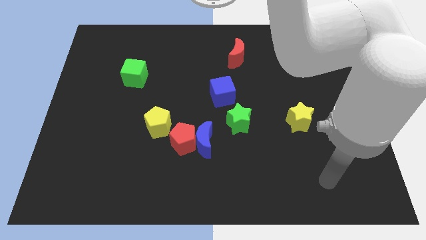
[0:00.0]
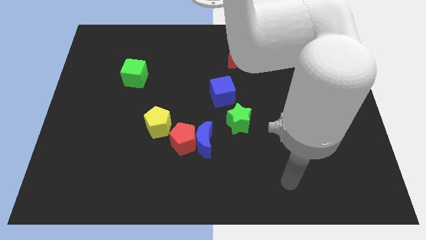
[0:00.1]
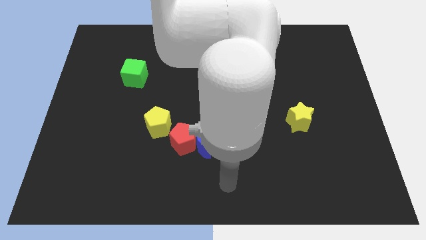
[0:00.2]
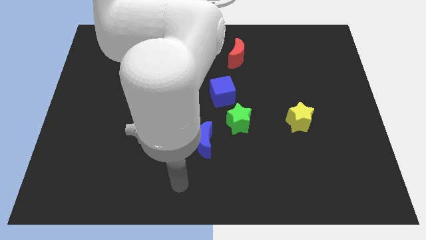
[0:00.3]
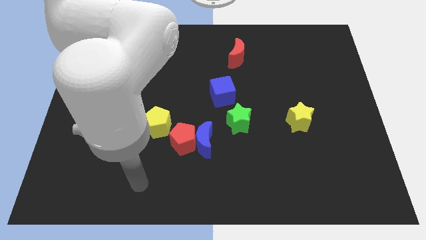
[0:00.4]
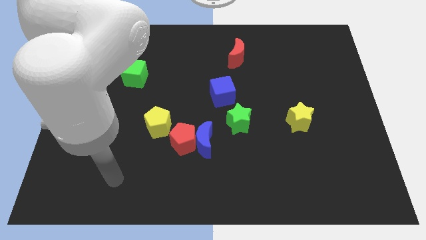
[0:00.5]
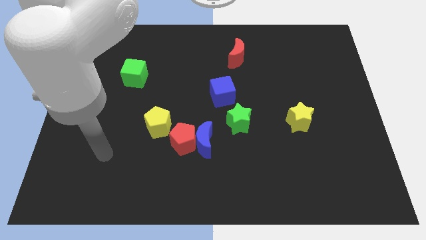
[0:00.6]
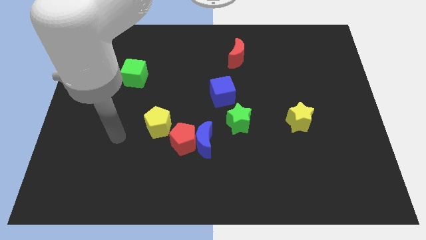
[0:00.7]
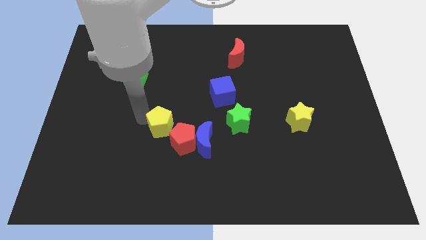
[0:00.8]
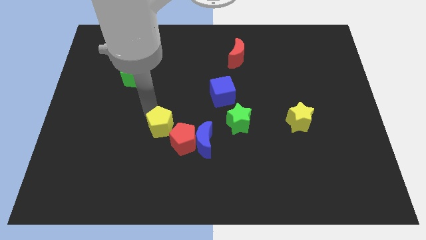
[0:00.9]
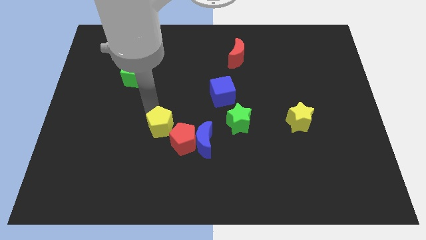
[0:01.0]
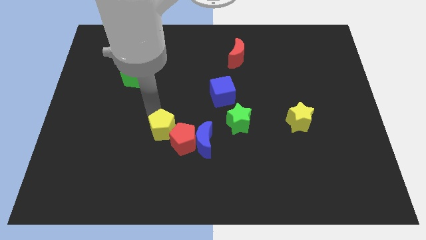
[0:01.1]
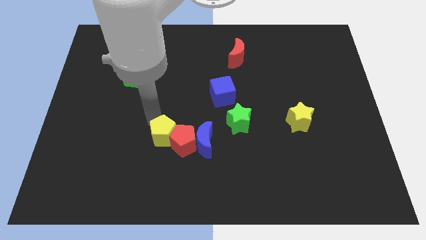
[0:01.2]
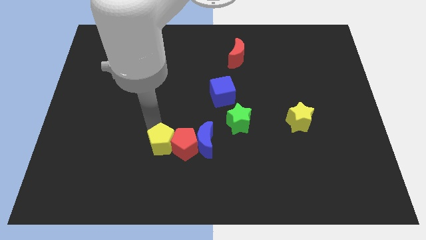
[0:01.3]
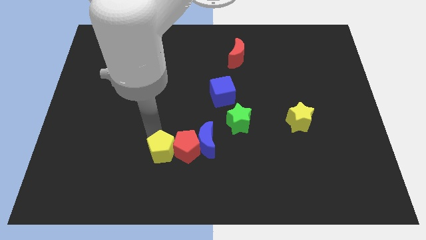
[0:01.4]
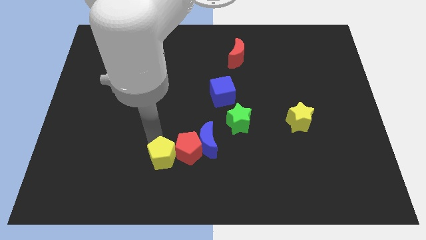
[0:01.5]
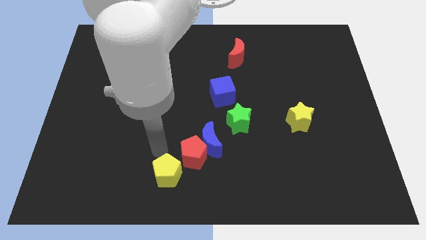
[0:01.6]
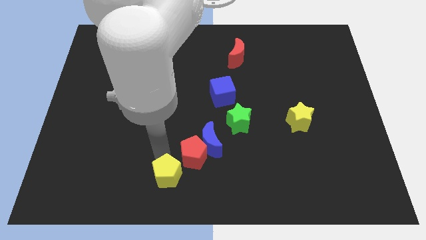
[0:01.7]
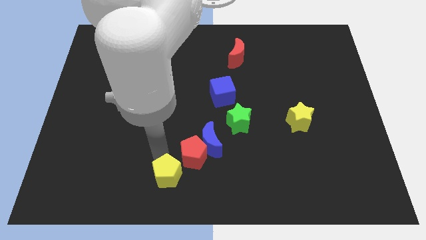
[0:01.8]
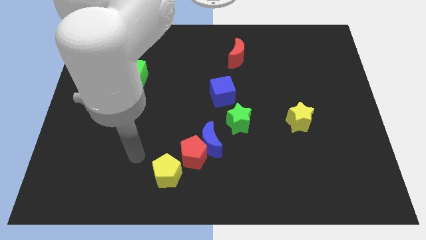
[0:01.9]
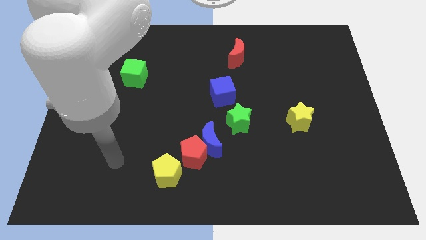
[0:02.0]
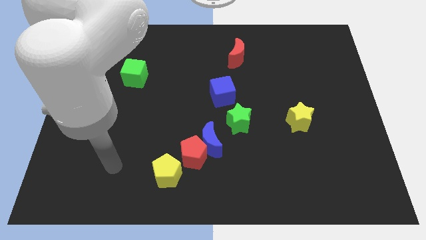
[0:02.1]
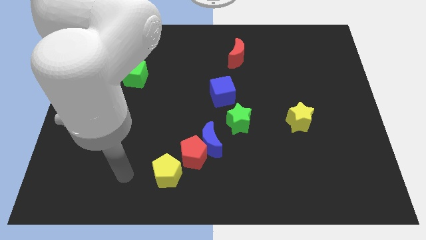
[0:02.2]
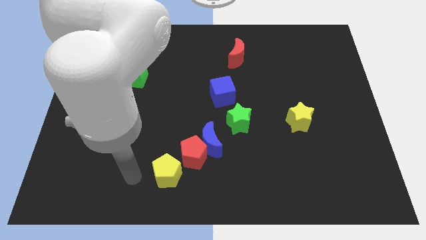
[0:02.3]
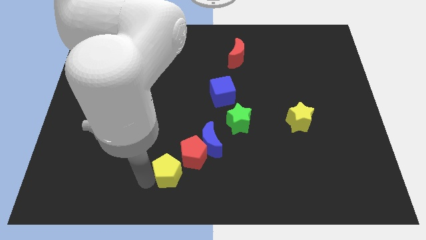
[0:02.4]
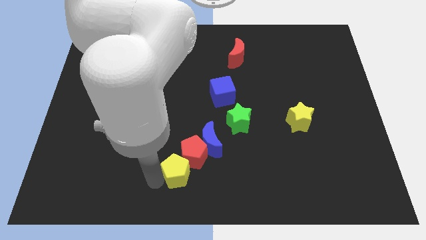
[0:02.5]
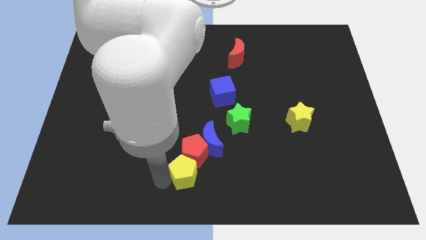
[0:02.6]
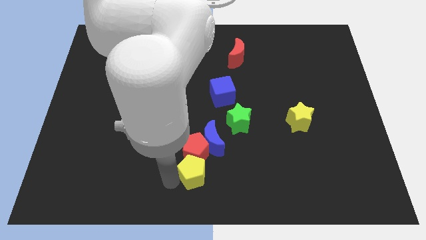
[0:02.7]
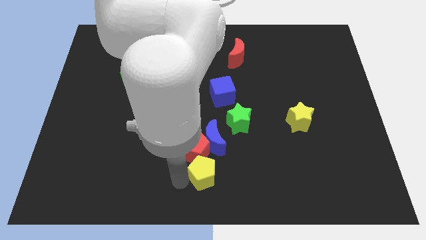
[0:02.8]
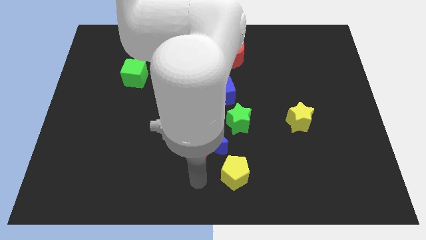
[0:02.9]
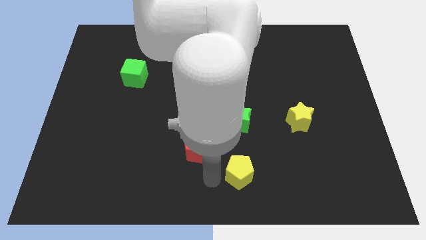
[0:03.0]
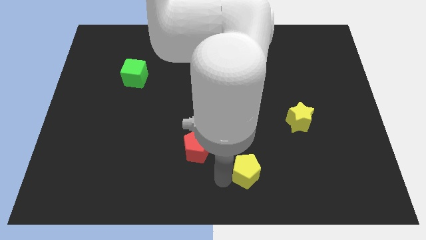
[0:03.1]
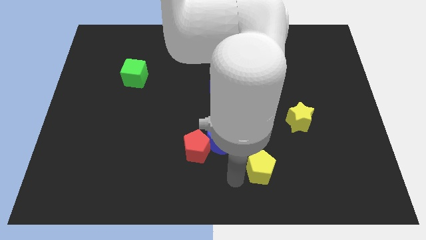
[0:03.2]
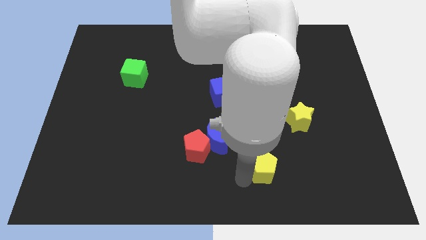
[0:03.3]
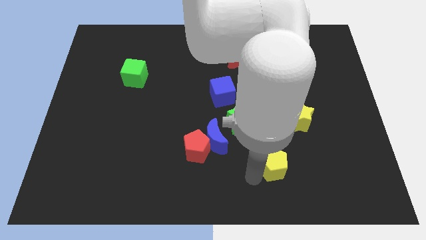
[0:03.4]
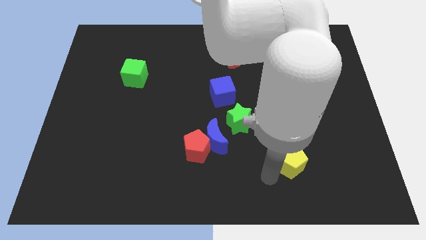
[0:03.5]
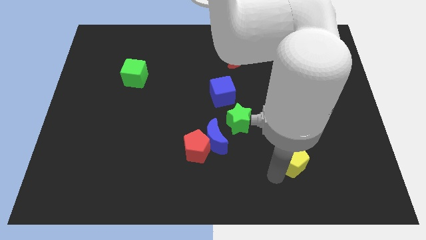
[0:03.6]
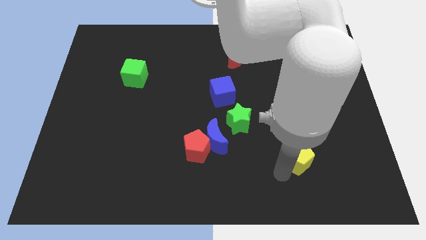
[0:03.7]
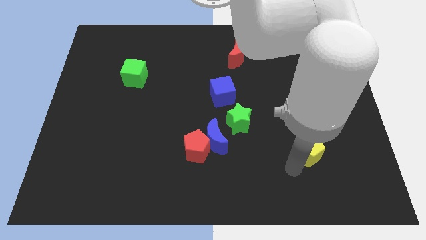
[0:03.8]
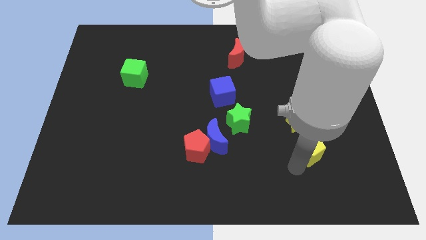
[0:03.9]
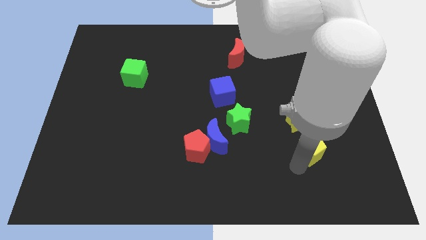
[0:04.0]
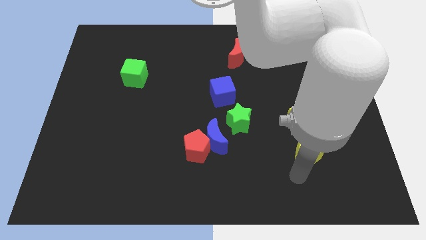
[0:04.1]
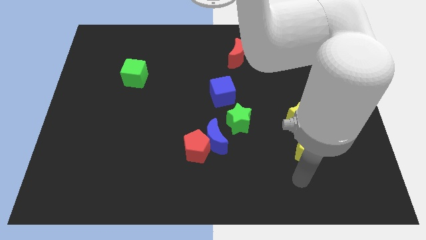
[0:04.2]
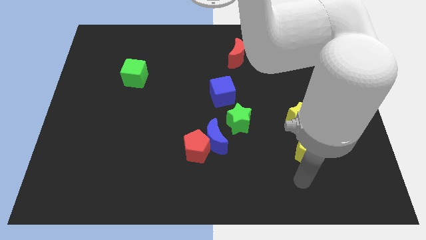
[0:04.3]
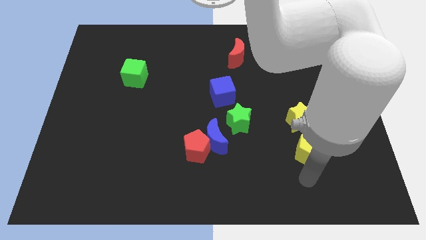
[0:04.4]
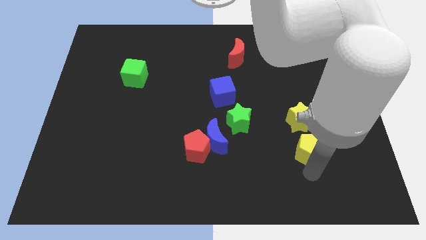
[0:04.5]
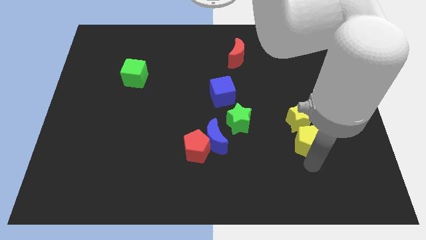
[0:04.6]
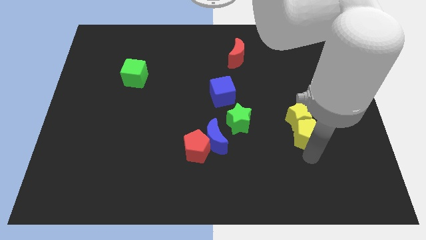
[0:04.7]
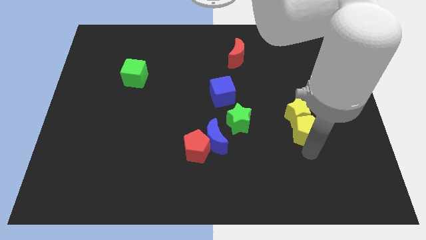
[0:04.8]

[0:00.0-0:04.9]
push the yellow pentagon to the yellow star

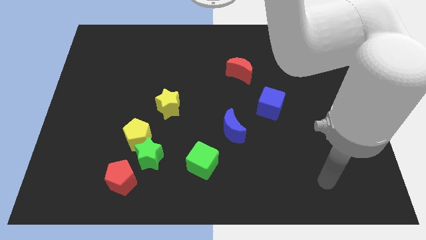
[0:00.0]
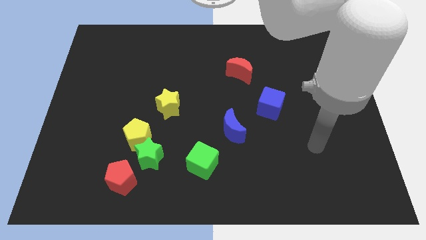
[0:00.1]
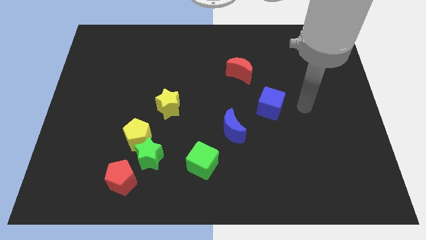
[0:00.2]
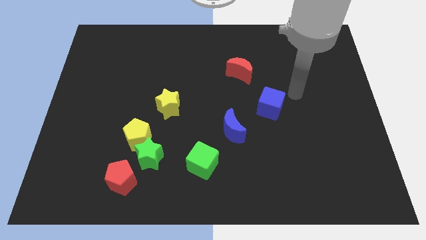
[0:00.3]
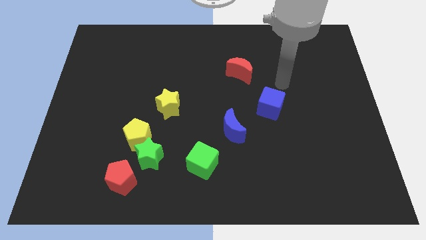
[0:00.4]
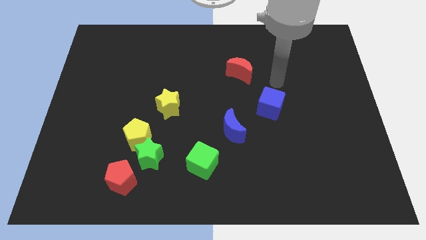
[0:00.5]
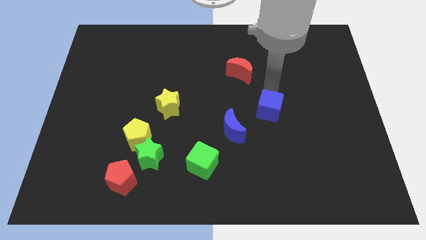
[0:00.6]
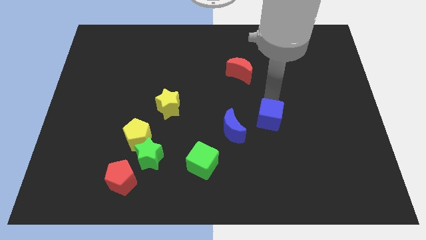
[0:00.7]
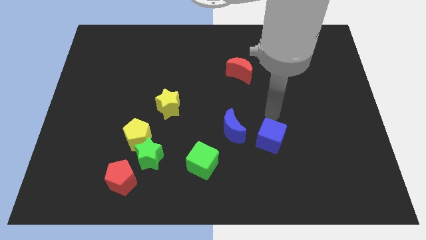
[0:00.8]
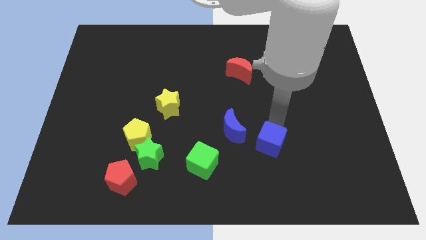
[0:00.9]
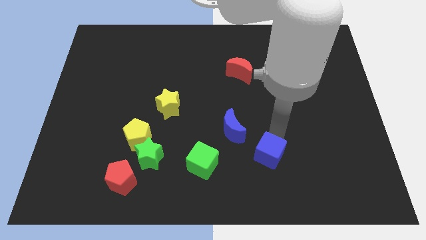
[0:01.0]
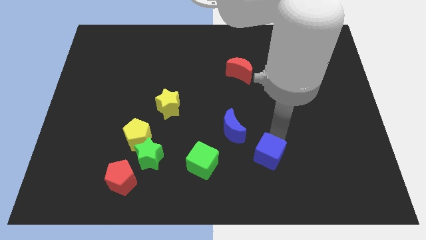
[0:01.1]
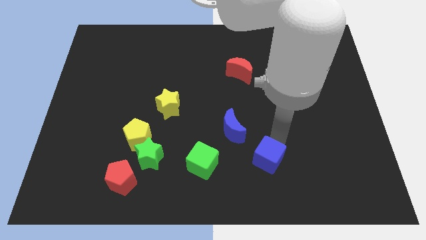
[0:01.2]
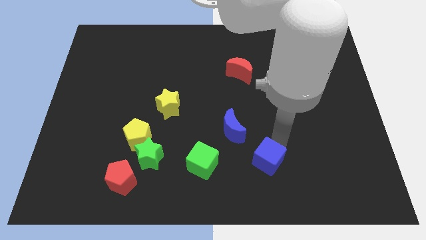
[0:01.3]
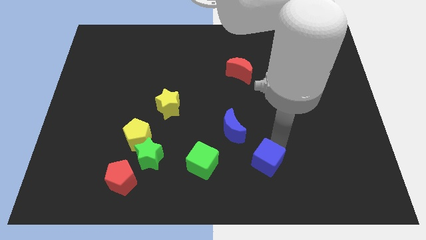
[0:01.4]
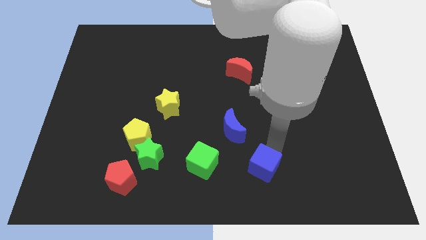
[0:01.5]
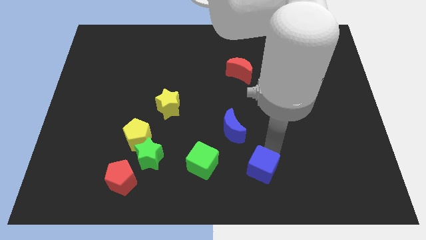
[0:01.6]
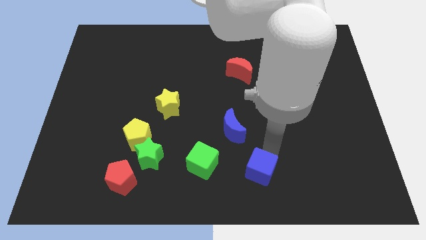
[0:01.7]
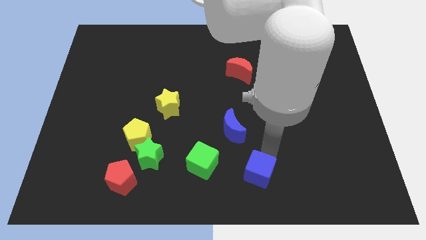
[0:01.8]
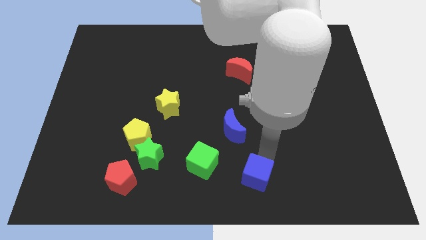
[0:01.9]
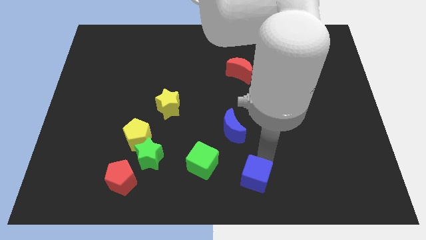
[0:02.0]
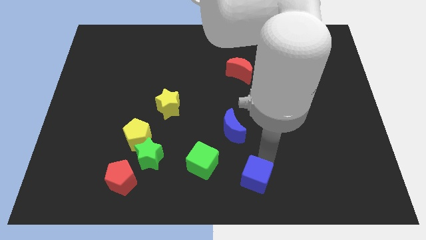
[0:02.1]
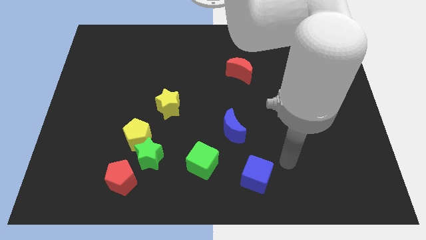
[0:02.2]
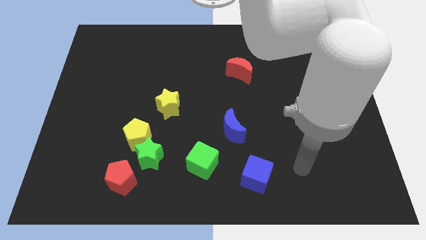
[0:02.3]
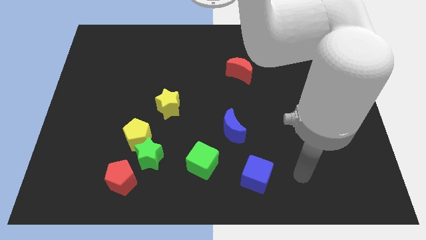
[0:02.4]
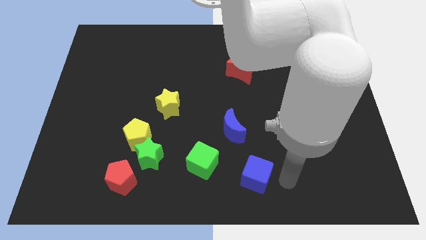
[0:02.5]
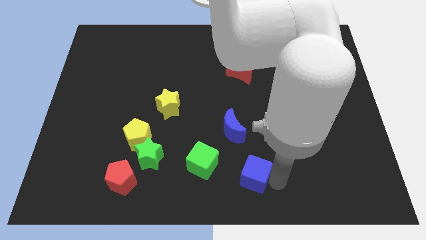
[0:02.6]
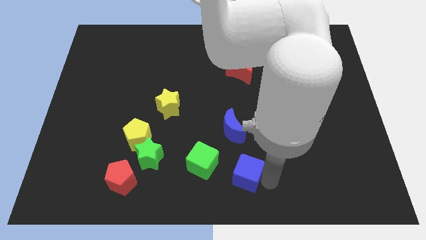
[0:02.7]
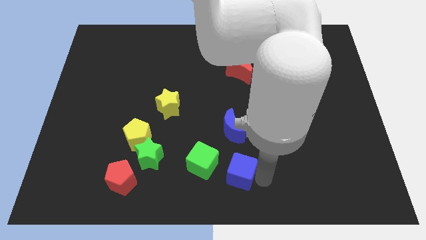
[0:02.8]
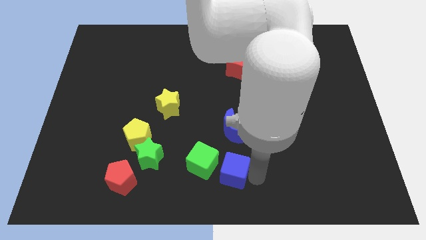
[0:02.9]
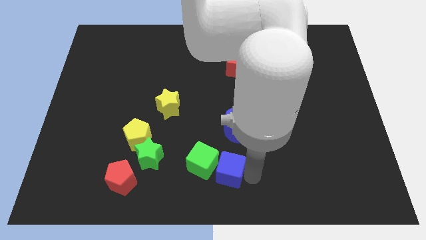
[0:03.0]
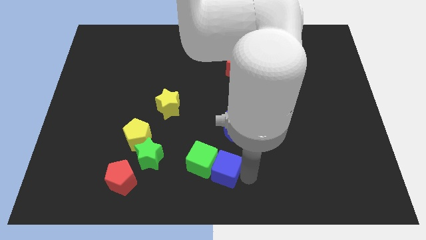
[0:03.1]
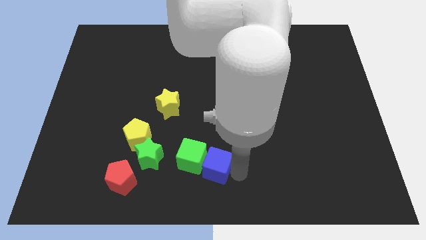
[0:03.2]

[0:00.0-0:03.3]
slide the blue cube next to the green cube

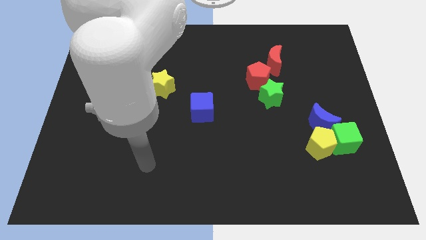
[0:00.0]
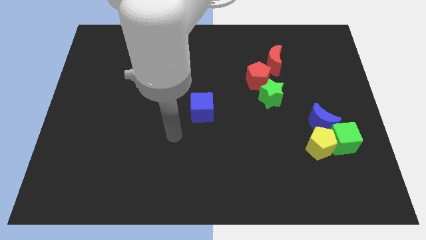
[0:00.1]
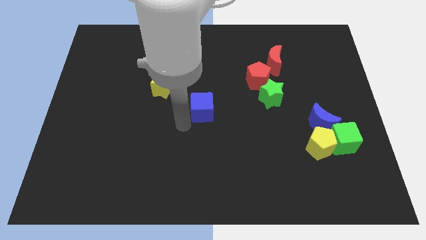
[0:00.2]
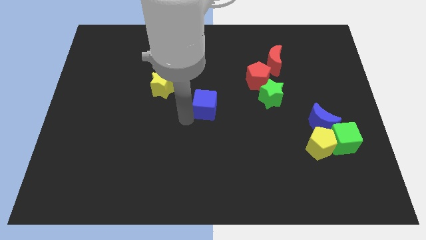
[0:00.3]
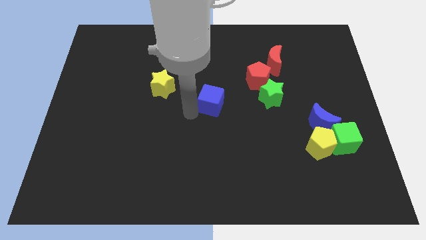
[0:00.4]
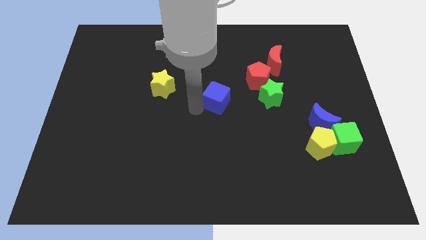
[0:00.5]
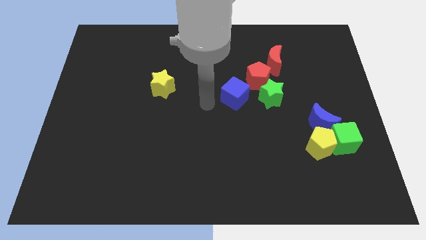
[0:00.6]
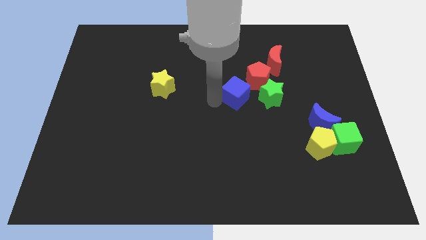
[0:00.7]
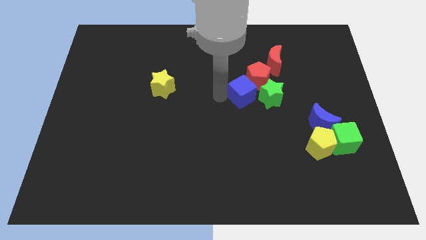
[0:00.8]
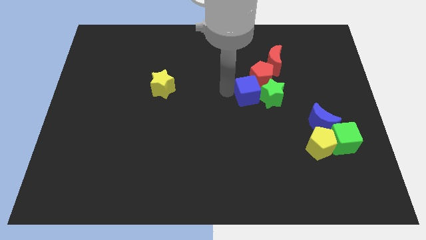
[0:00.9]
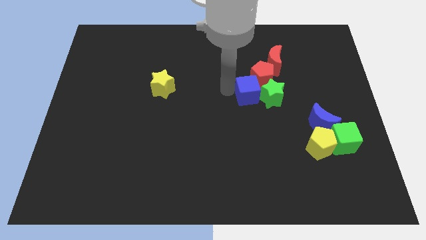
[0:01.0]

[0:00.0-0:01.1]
slide the blue cube next to the red pentagon
